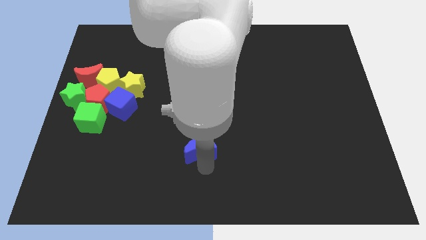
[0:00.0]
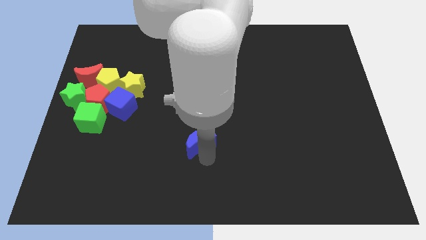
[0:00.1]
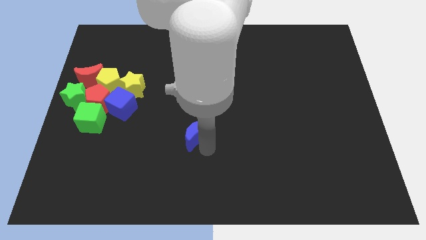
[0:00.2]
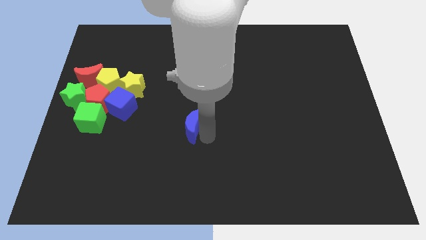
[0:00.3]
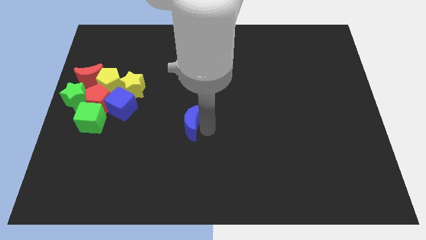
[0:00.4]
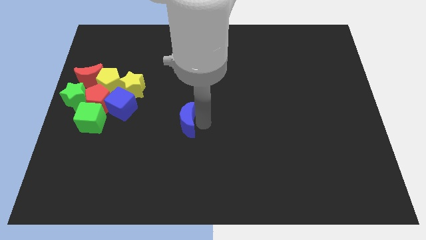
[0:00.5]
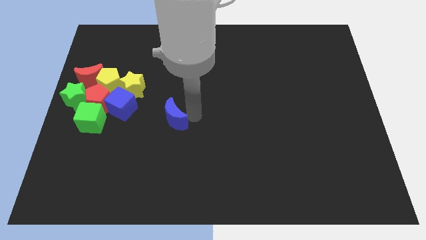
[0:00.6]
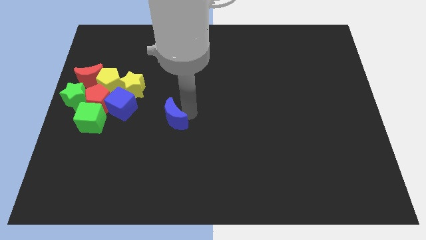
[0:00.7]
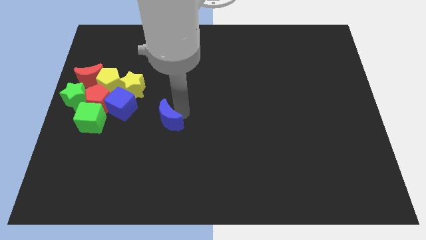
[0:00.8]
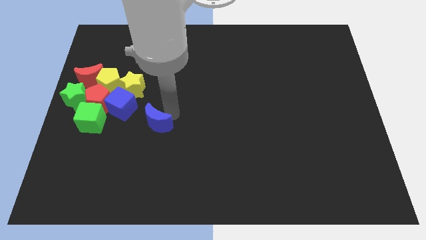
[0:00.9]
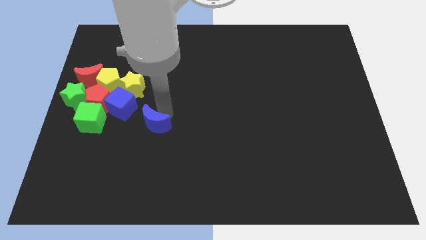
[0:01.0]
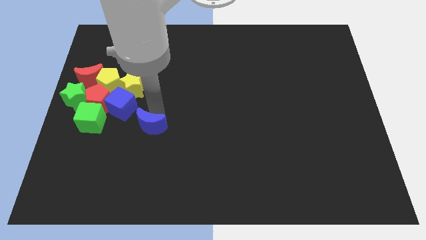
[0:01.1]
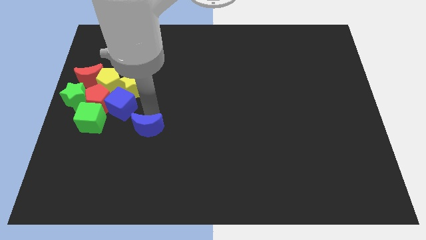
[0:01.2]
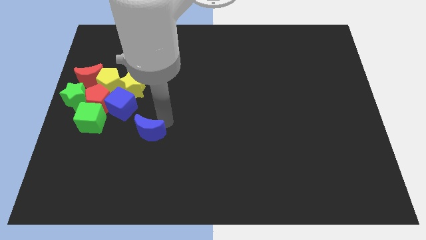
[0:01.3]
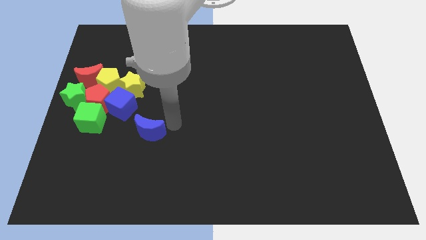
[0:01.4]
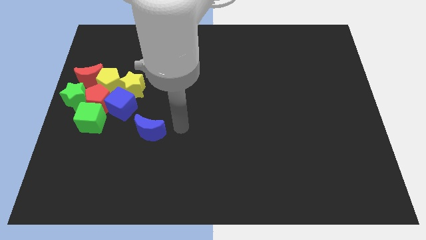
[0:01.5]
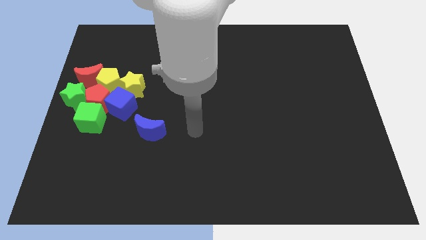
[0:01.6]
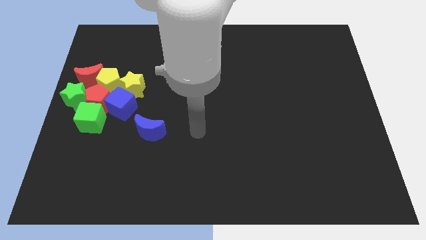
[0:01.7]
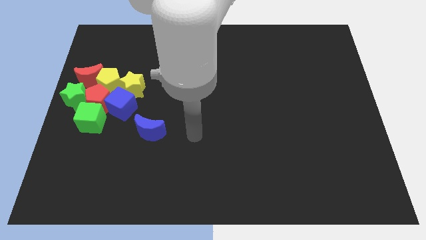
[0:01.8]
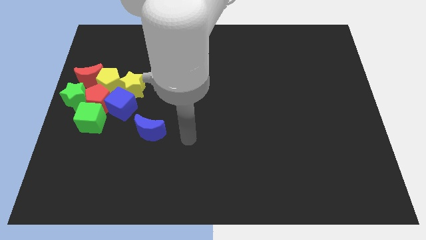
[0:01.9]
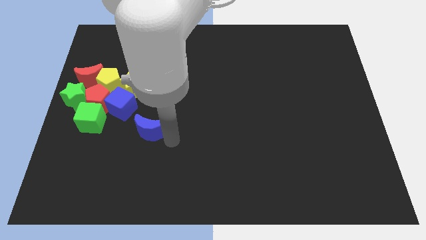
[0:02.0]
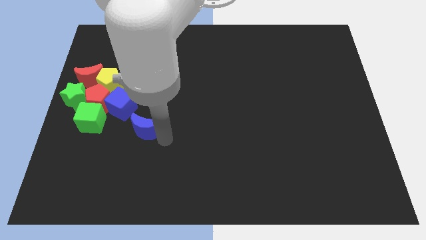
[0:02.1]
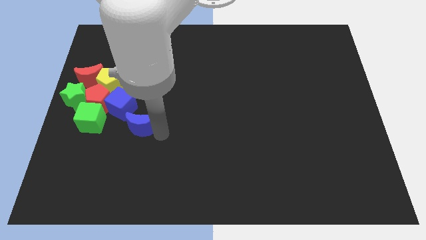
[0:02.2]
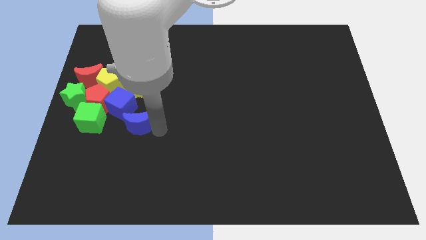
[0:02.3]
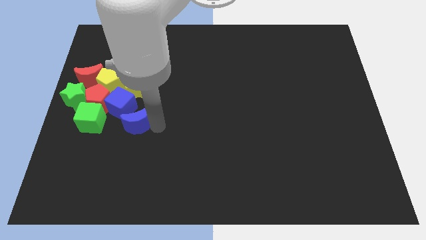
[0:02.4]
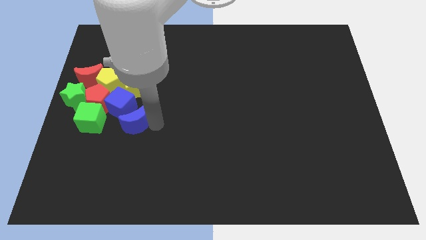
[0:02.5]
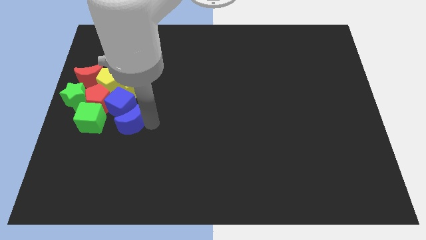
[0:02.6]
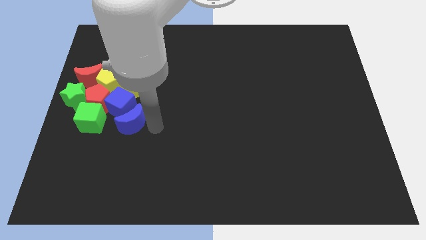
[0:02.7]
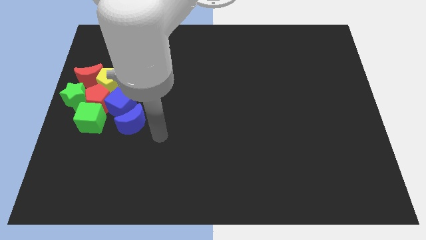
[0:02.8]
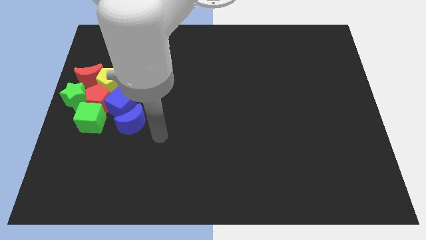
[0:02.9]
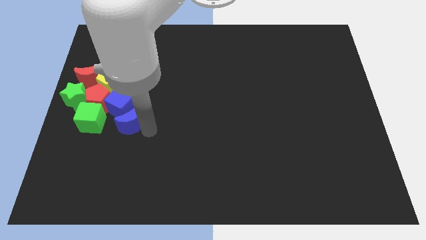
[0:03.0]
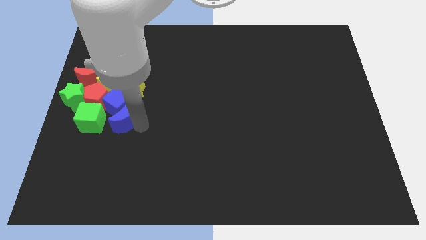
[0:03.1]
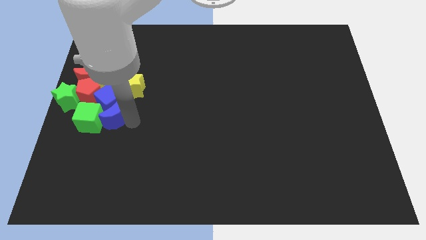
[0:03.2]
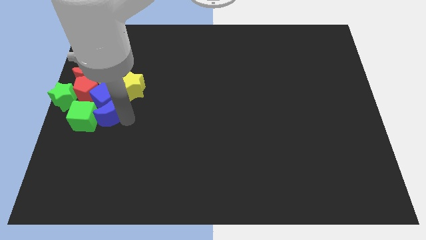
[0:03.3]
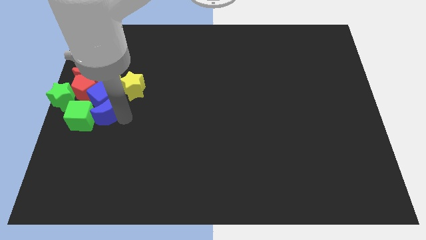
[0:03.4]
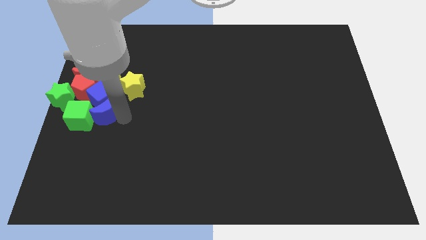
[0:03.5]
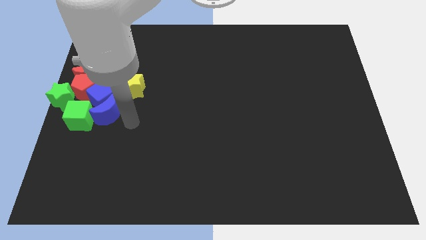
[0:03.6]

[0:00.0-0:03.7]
push the blue moon into the blocks on the center left

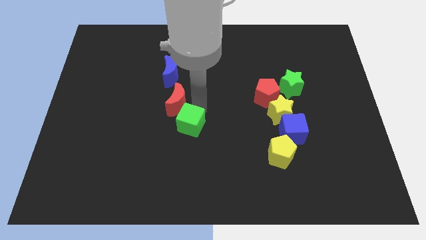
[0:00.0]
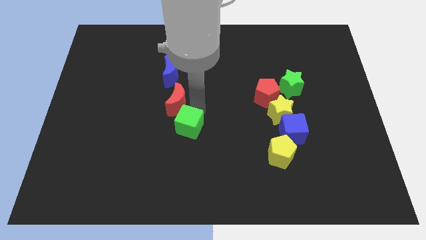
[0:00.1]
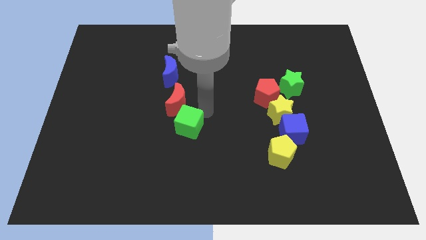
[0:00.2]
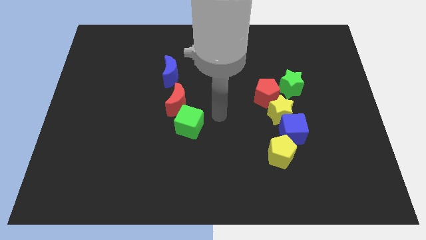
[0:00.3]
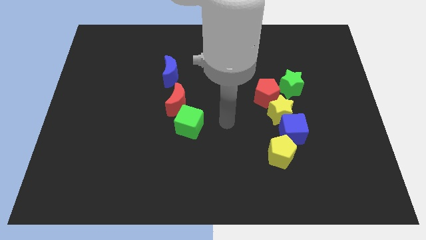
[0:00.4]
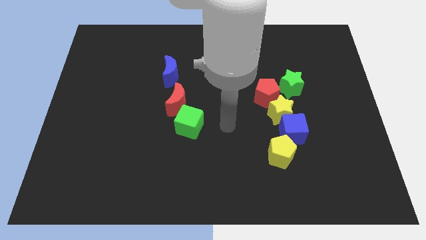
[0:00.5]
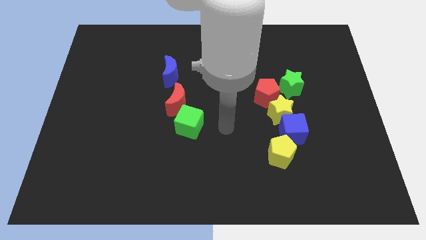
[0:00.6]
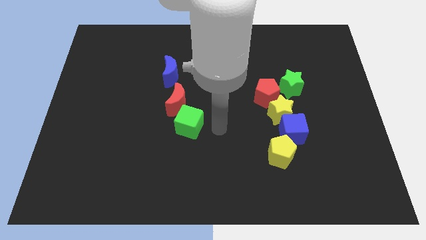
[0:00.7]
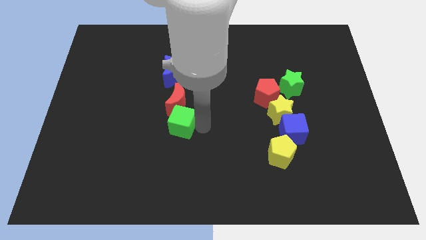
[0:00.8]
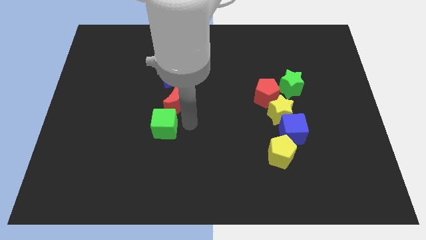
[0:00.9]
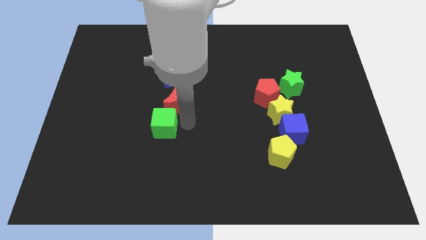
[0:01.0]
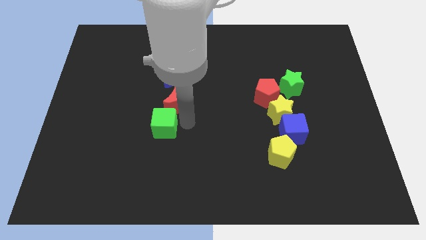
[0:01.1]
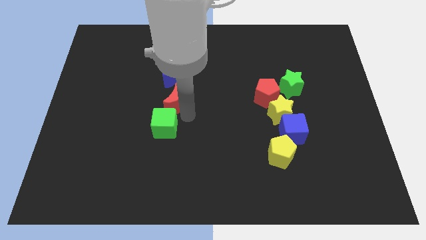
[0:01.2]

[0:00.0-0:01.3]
place the green cube down to the red moon

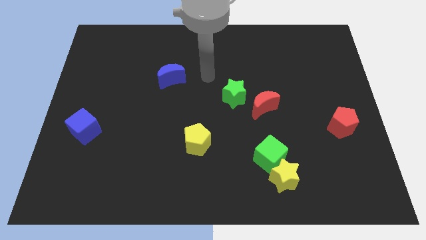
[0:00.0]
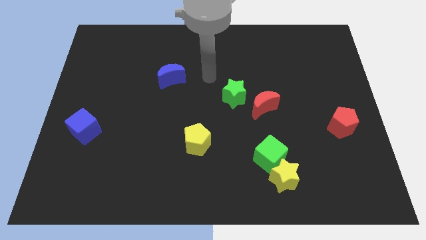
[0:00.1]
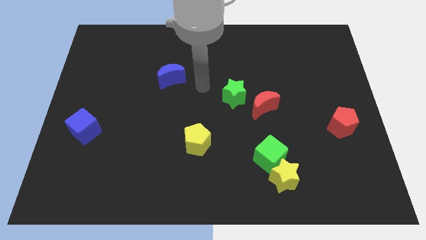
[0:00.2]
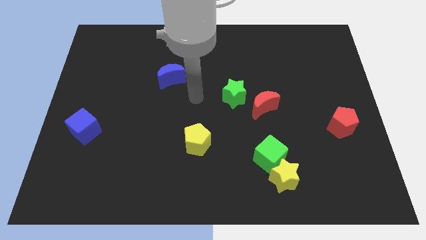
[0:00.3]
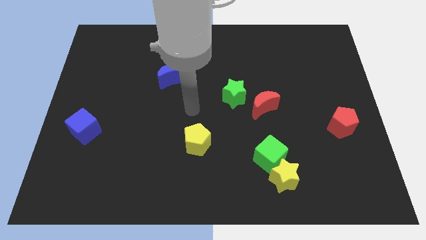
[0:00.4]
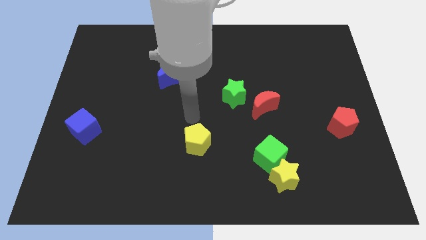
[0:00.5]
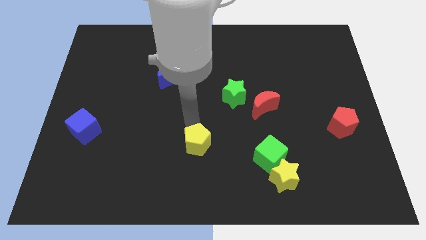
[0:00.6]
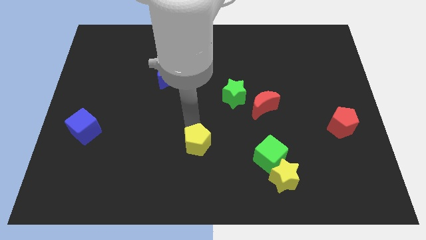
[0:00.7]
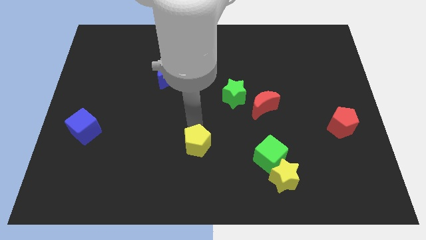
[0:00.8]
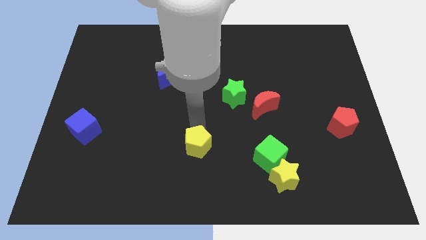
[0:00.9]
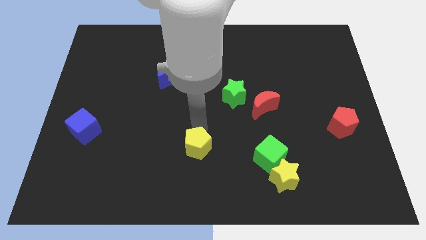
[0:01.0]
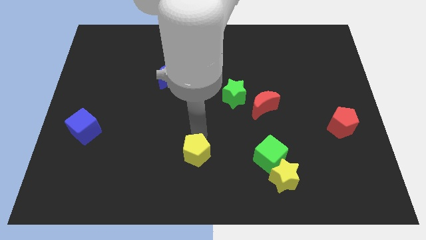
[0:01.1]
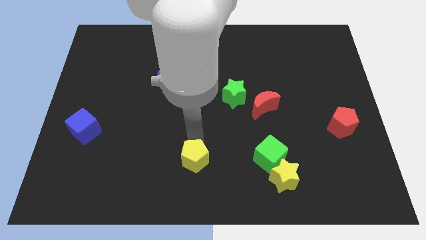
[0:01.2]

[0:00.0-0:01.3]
move the yellow pentagon to the left side of the green cube

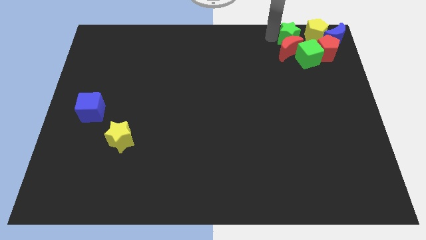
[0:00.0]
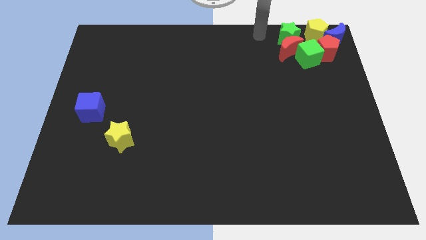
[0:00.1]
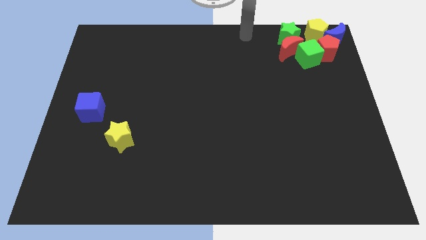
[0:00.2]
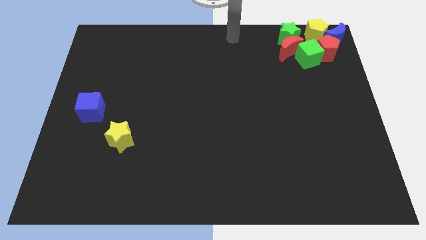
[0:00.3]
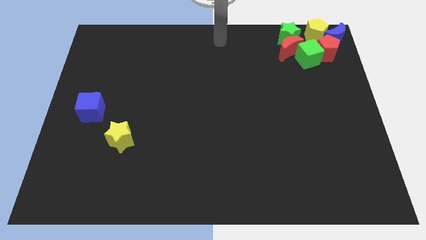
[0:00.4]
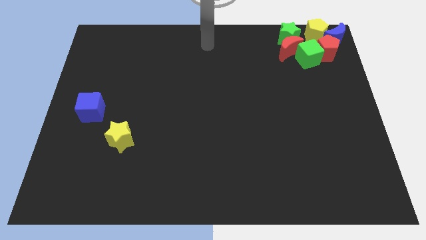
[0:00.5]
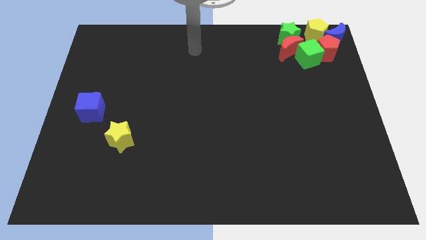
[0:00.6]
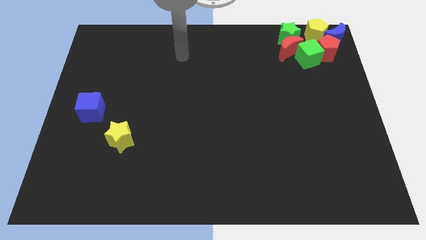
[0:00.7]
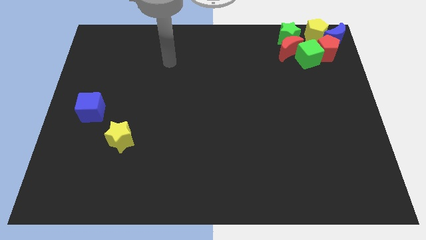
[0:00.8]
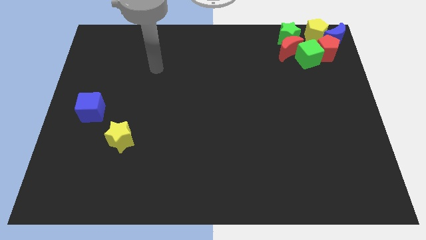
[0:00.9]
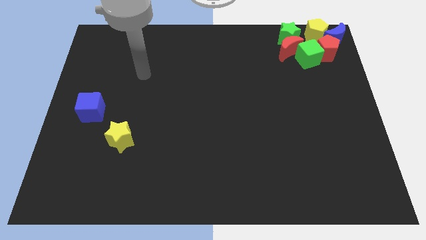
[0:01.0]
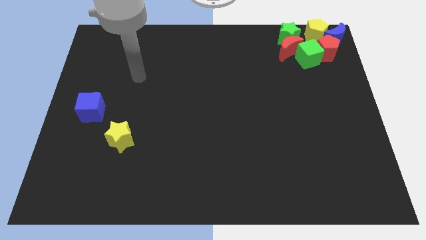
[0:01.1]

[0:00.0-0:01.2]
move your arm away from the green star

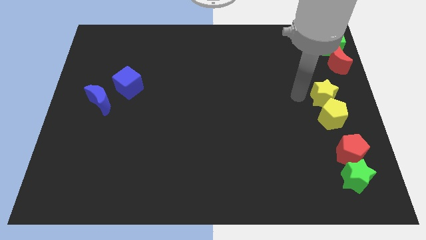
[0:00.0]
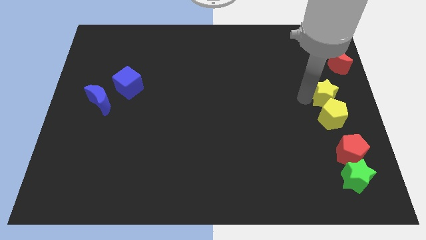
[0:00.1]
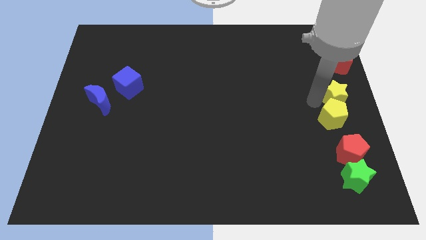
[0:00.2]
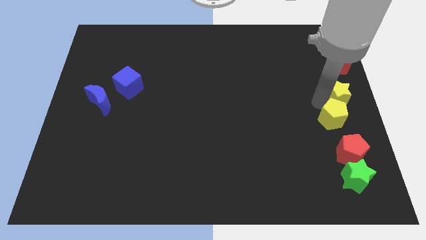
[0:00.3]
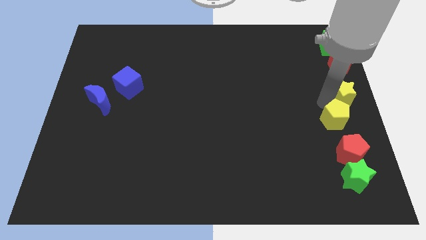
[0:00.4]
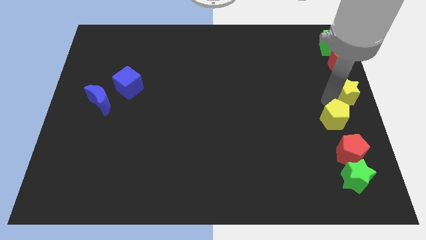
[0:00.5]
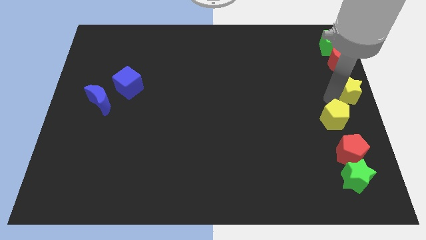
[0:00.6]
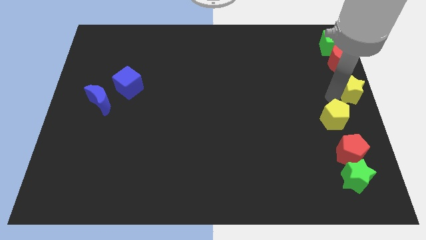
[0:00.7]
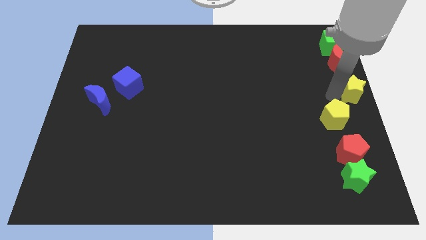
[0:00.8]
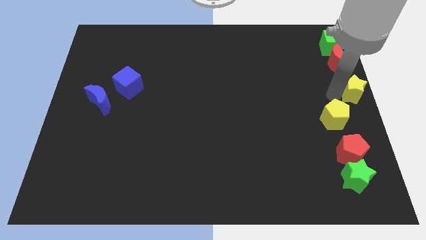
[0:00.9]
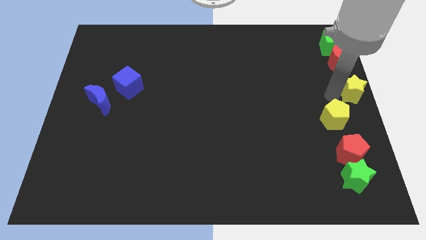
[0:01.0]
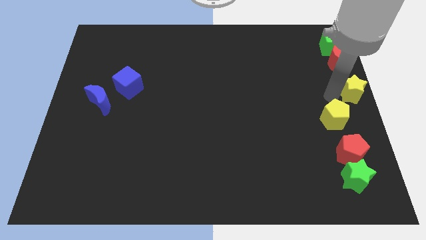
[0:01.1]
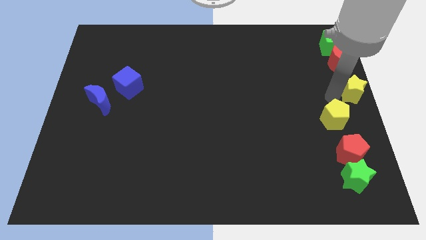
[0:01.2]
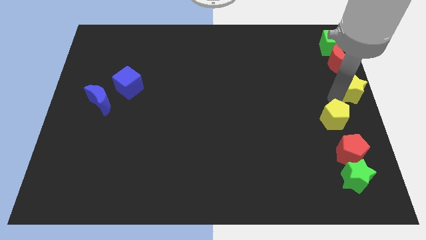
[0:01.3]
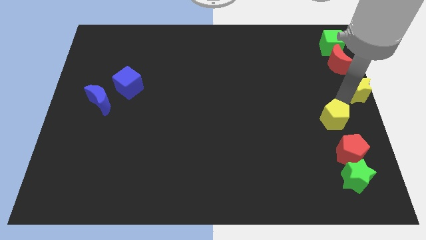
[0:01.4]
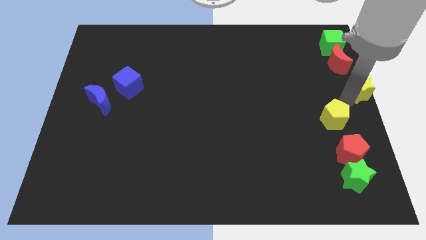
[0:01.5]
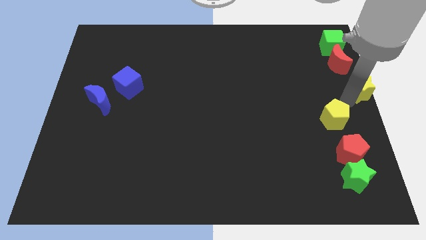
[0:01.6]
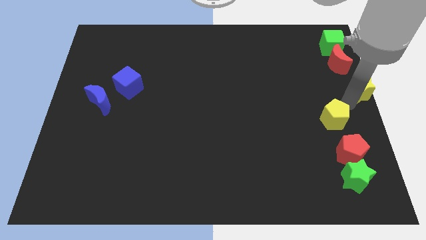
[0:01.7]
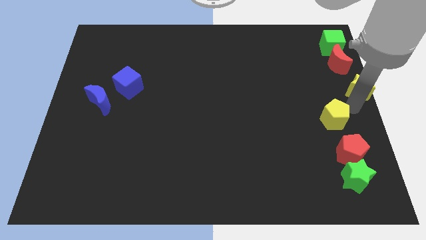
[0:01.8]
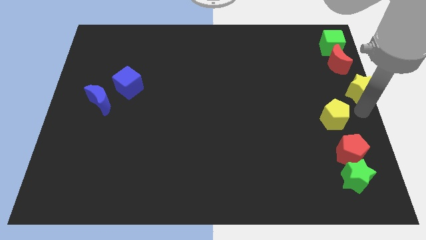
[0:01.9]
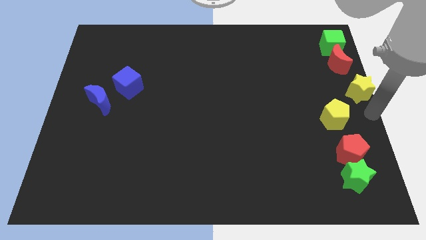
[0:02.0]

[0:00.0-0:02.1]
move the yellow star diagonal to the yellow pentagon
